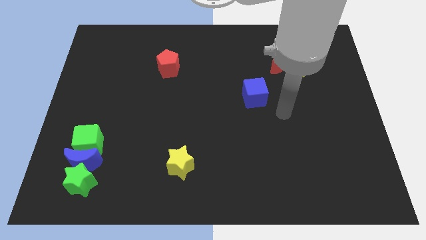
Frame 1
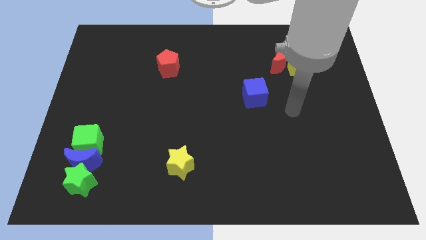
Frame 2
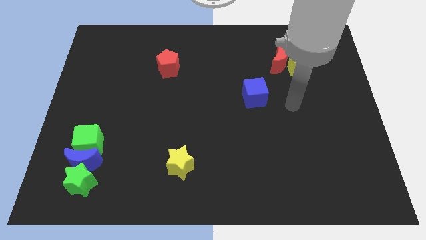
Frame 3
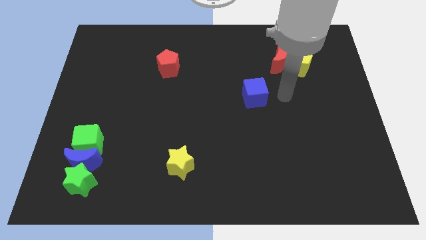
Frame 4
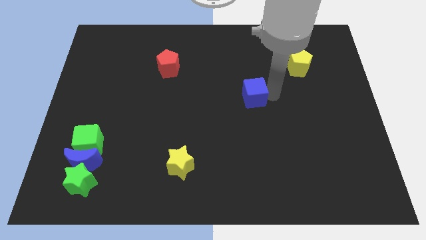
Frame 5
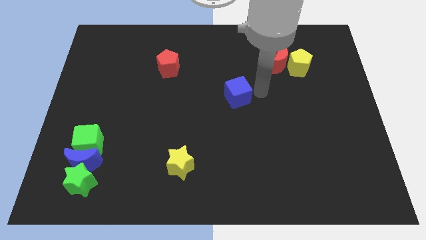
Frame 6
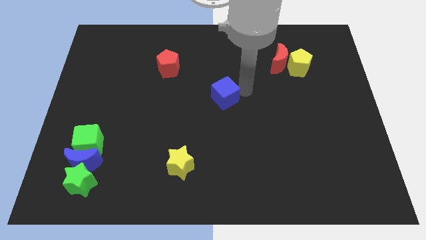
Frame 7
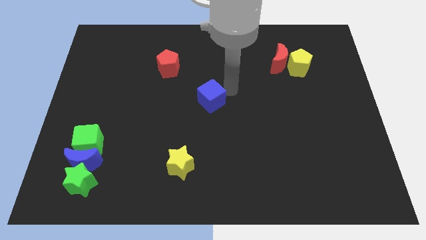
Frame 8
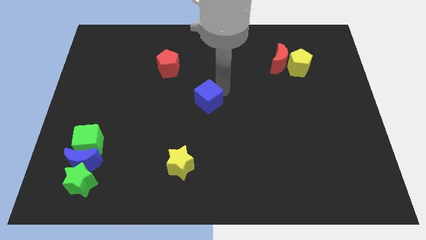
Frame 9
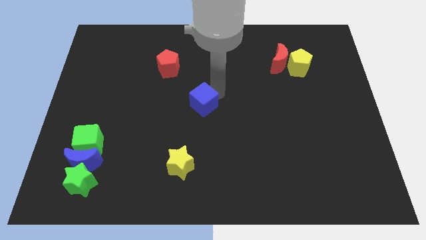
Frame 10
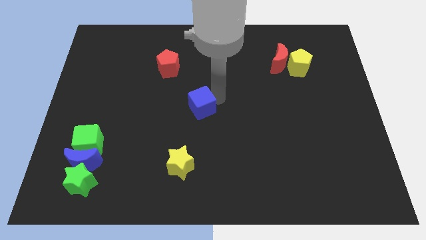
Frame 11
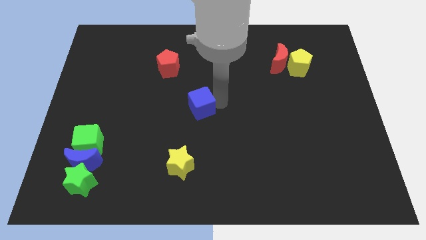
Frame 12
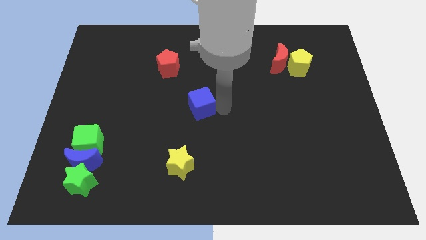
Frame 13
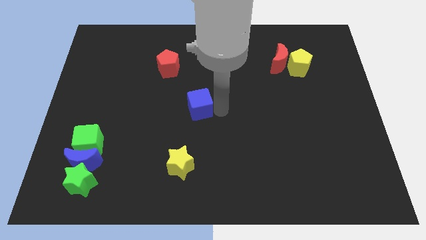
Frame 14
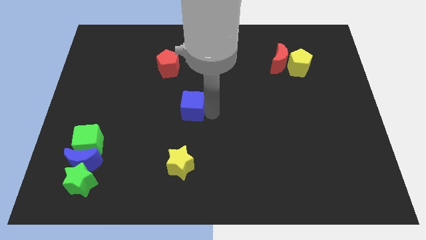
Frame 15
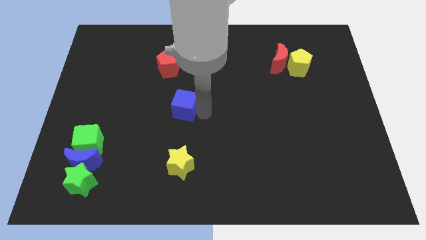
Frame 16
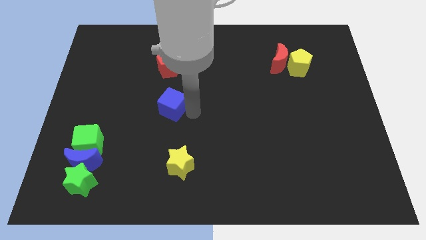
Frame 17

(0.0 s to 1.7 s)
put the blue cube vertically below the red pentagon

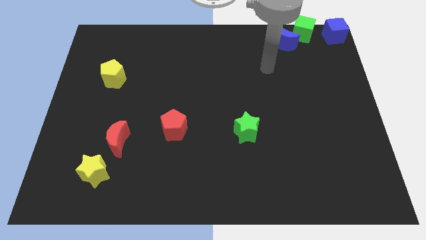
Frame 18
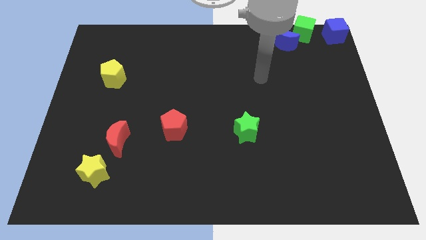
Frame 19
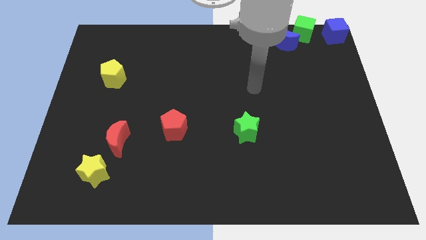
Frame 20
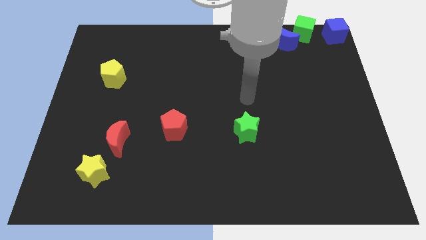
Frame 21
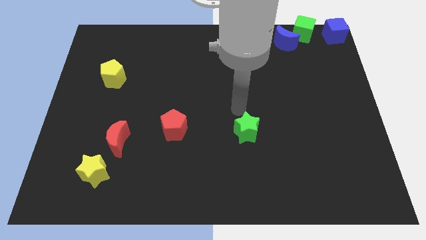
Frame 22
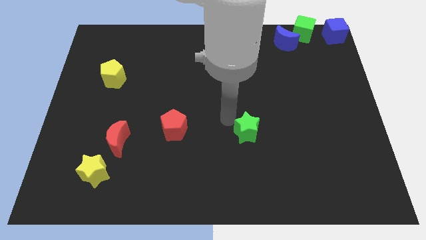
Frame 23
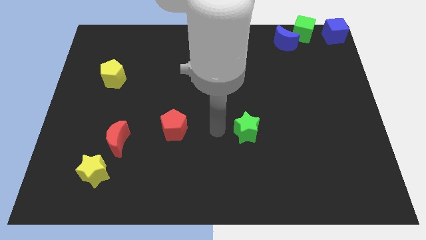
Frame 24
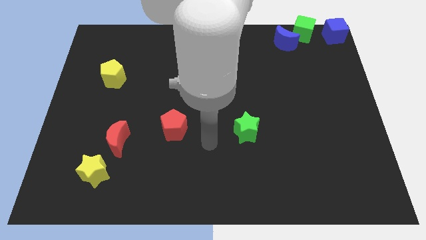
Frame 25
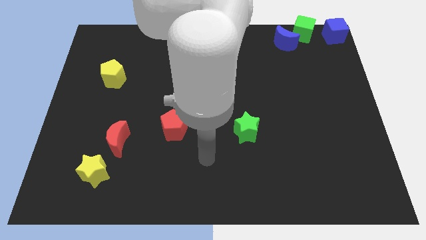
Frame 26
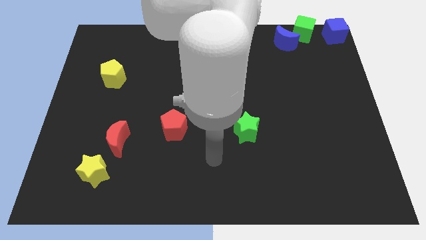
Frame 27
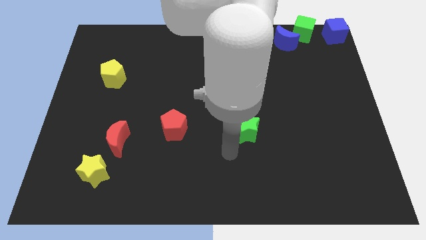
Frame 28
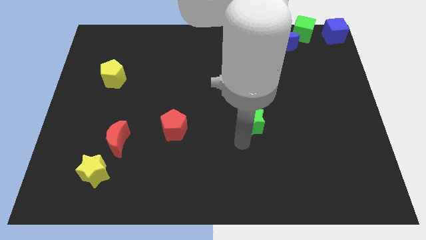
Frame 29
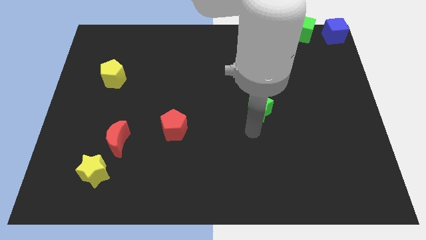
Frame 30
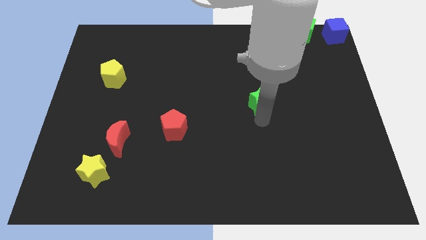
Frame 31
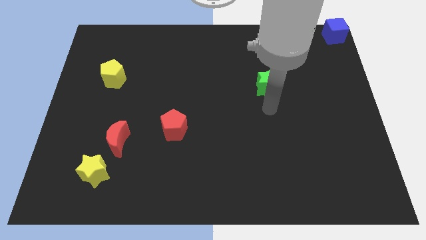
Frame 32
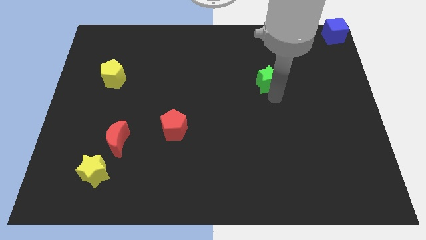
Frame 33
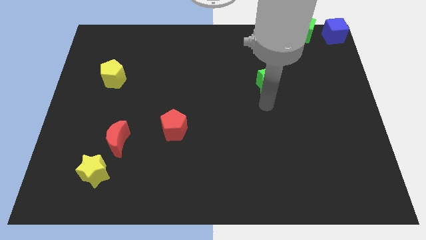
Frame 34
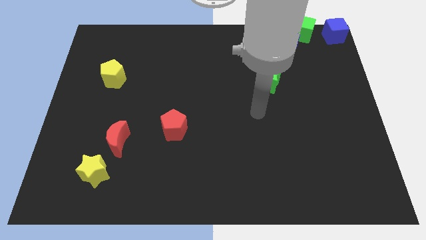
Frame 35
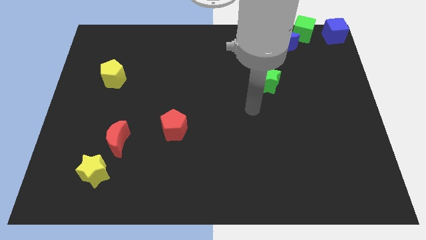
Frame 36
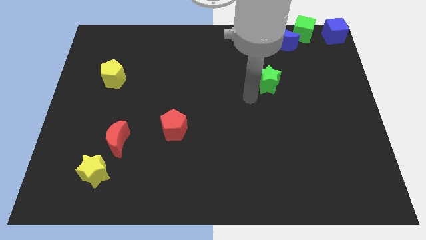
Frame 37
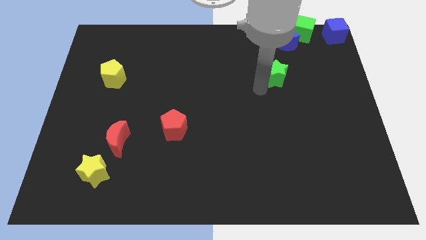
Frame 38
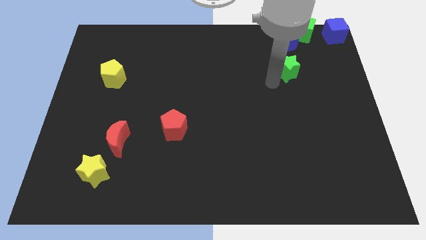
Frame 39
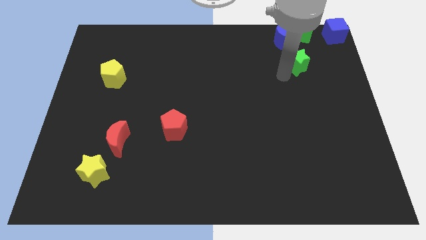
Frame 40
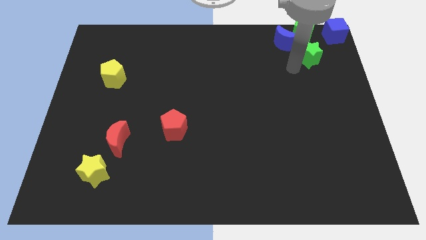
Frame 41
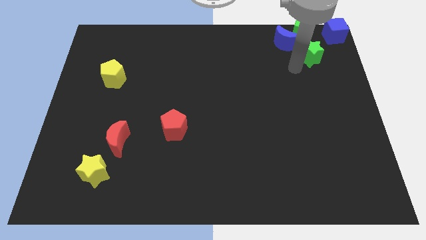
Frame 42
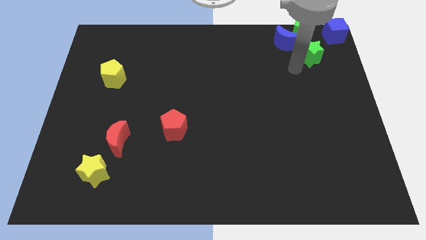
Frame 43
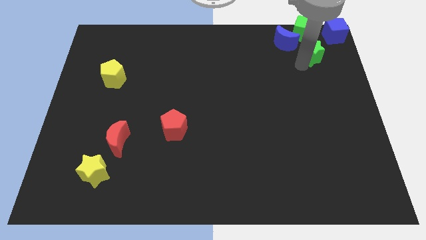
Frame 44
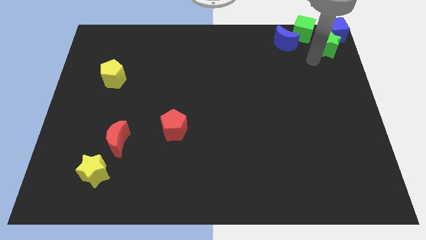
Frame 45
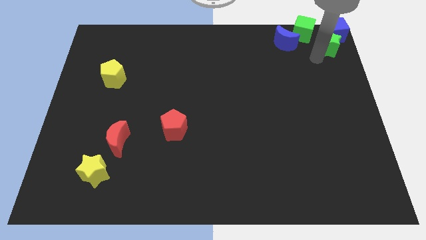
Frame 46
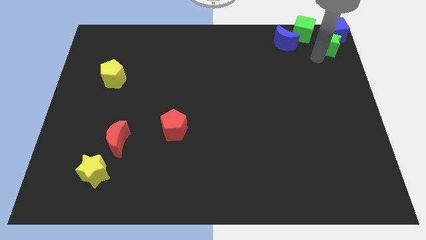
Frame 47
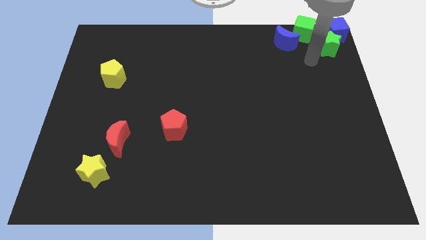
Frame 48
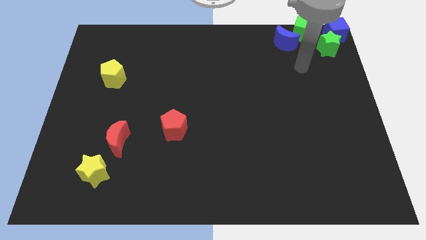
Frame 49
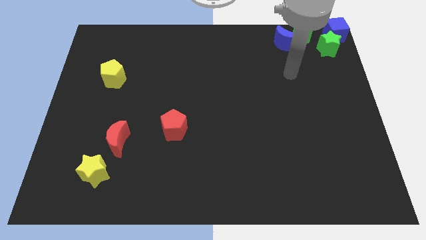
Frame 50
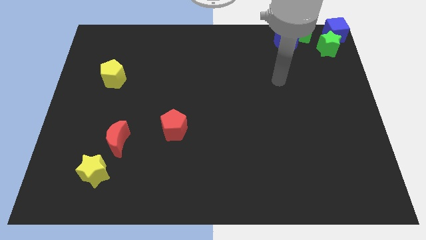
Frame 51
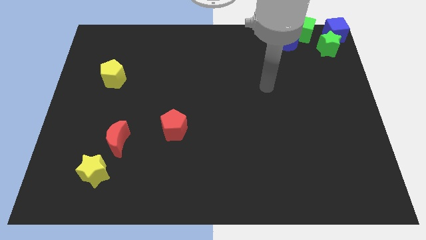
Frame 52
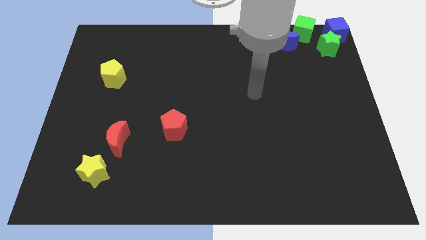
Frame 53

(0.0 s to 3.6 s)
move the green star diagonally bottom left to the blue cube

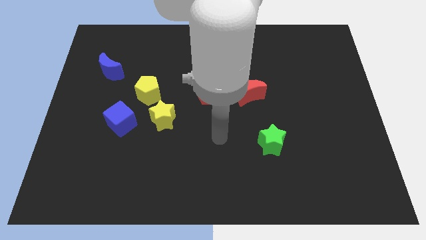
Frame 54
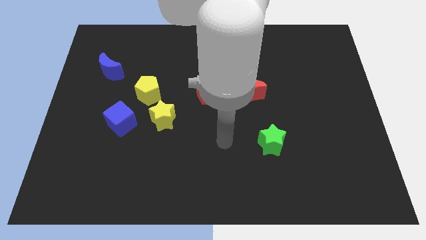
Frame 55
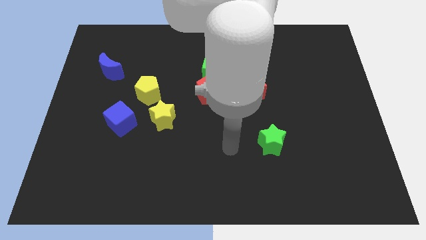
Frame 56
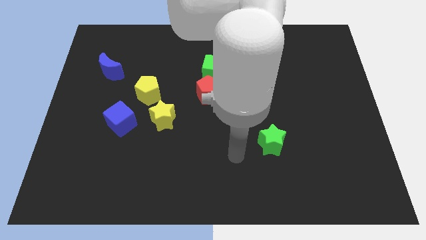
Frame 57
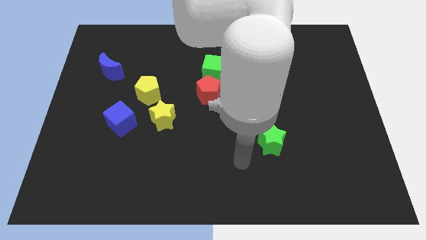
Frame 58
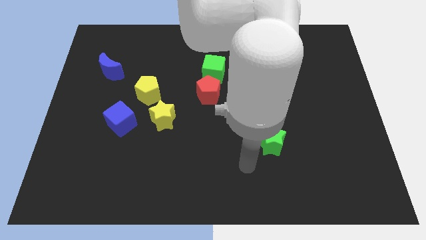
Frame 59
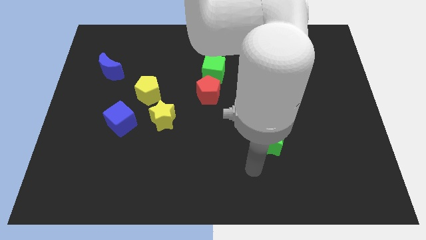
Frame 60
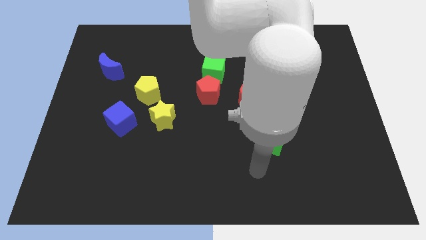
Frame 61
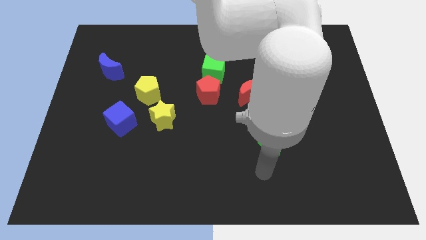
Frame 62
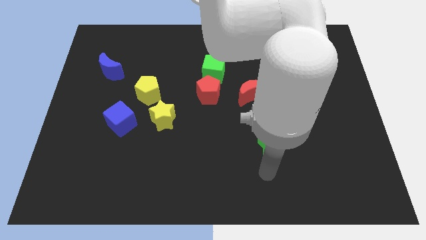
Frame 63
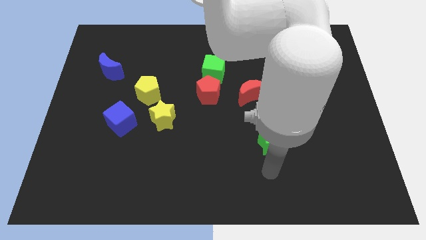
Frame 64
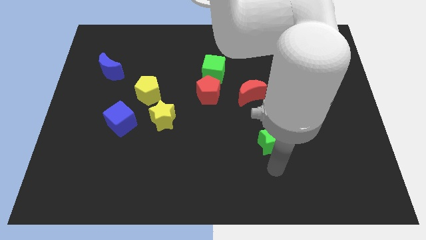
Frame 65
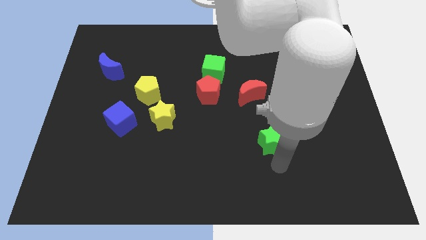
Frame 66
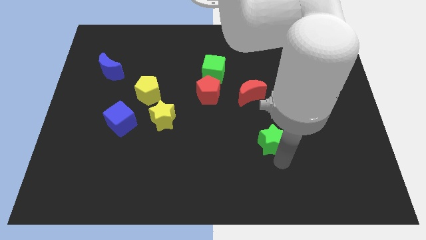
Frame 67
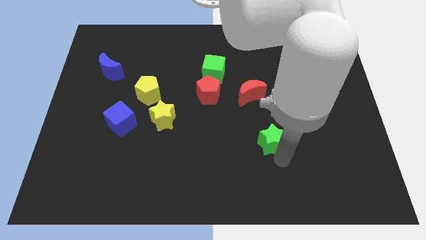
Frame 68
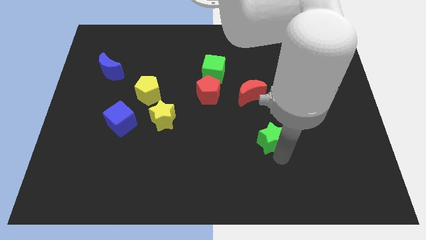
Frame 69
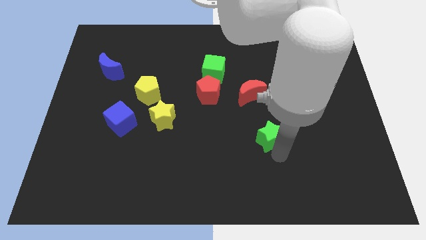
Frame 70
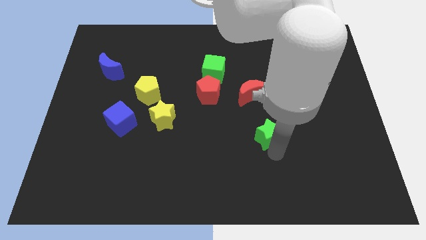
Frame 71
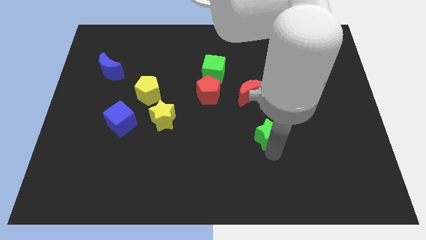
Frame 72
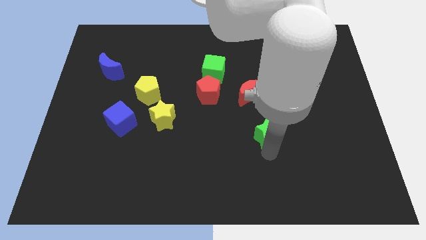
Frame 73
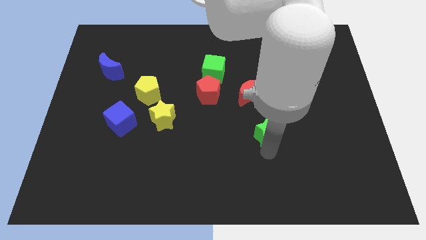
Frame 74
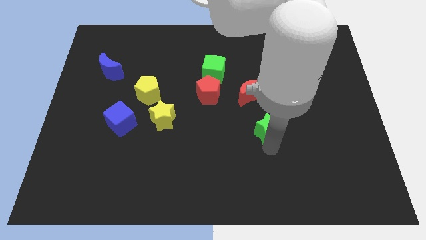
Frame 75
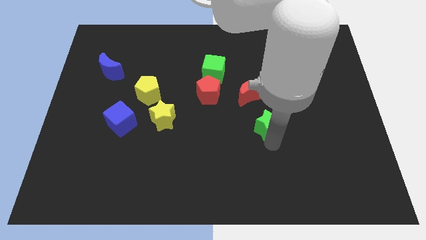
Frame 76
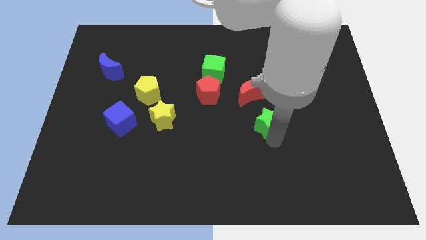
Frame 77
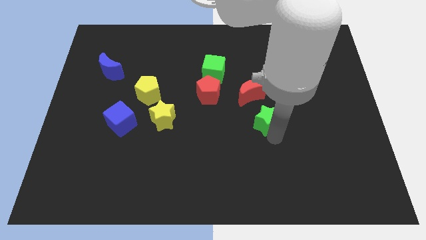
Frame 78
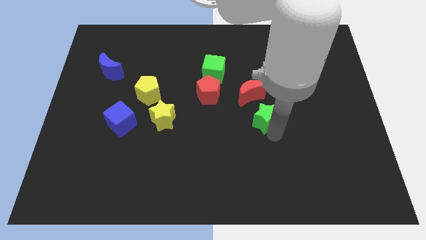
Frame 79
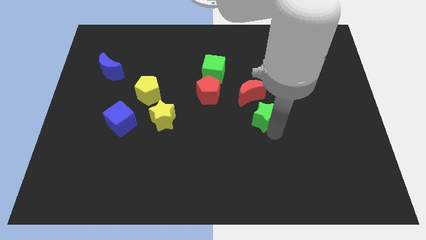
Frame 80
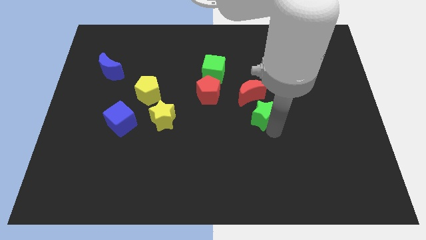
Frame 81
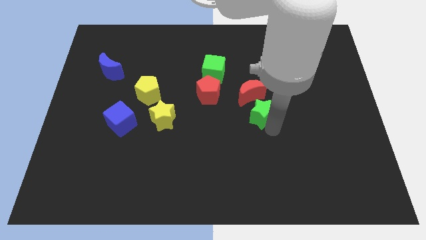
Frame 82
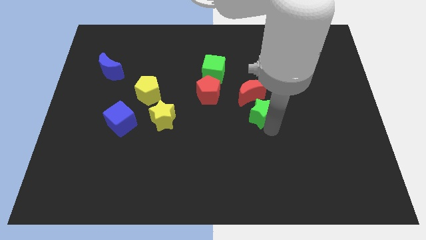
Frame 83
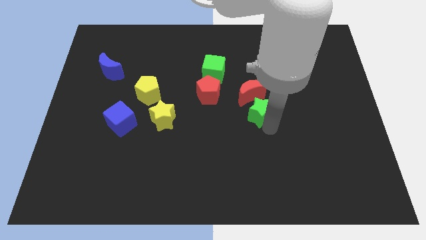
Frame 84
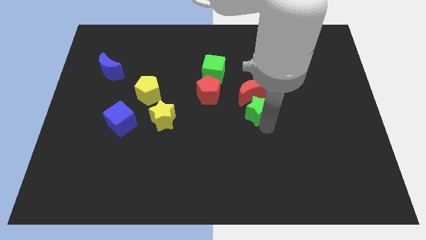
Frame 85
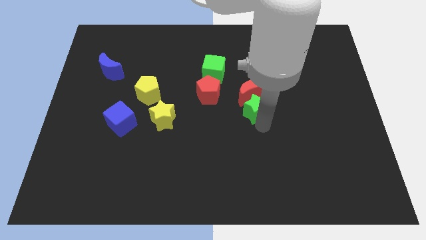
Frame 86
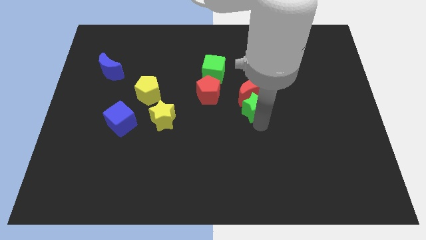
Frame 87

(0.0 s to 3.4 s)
move the green star to the bottom left side of the red moon

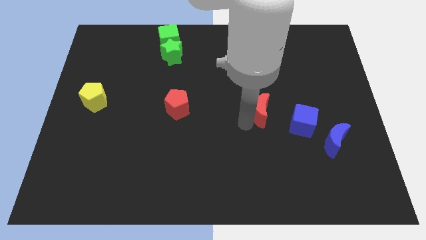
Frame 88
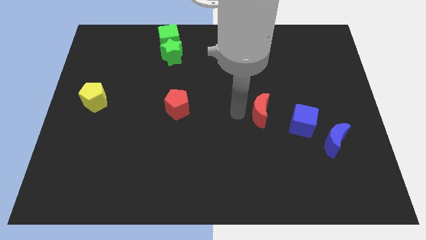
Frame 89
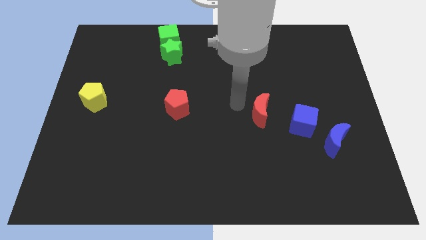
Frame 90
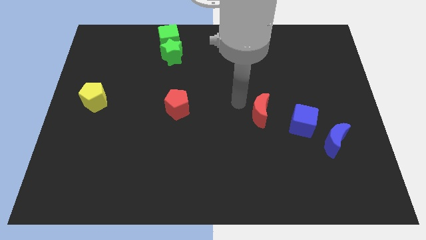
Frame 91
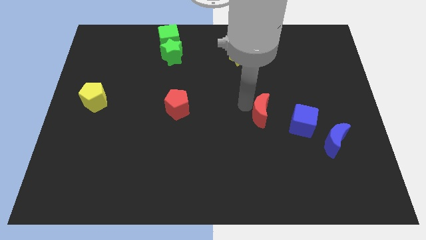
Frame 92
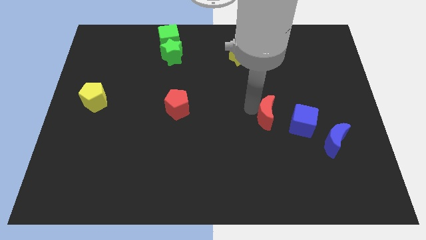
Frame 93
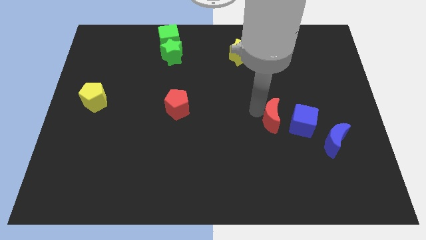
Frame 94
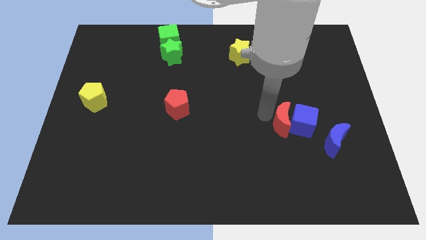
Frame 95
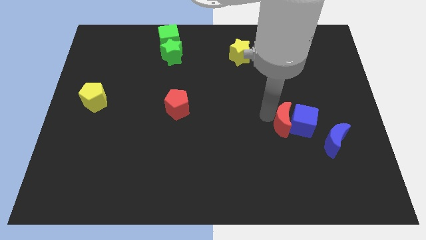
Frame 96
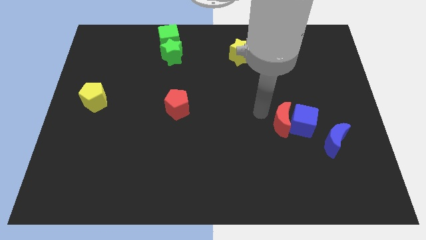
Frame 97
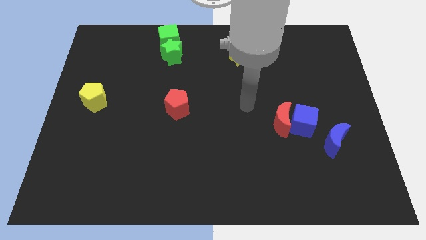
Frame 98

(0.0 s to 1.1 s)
push the red crescent into the left side of the blue cube
